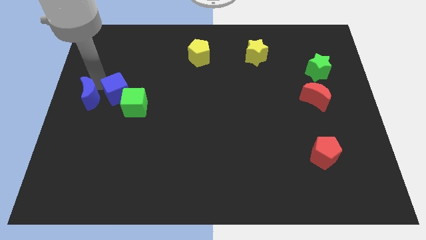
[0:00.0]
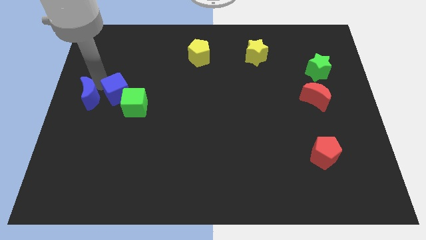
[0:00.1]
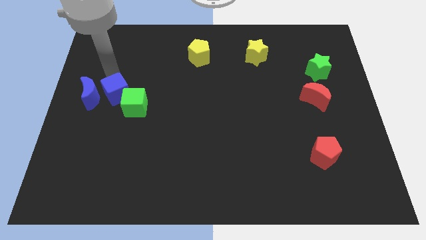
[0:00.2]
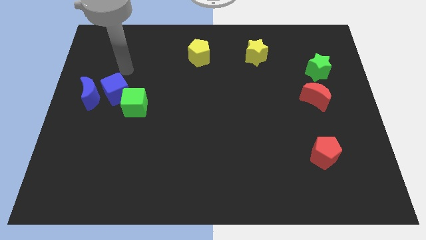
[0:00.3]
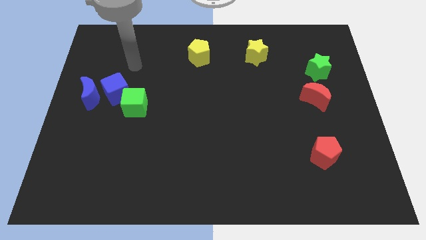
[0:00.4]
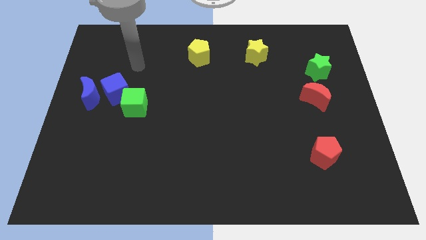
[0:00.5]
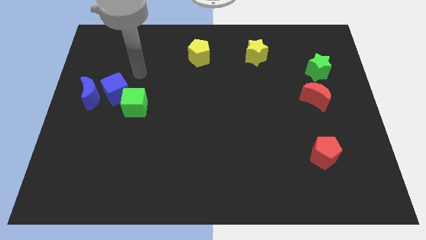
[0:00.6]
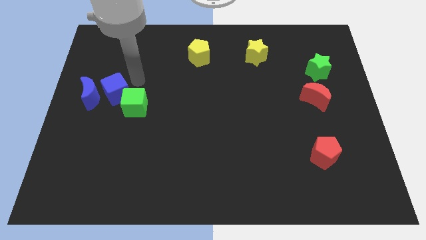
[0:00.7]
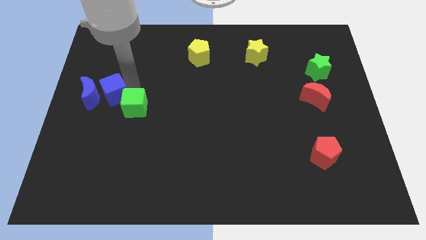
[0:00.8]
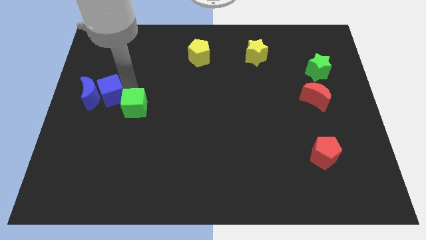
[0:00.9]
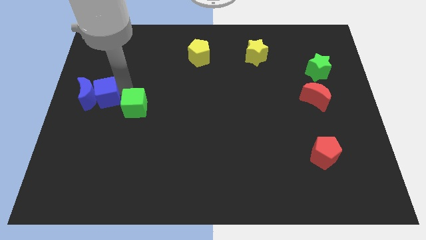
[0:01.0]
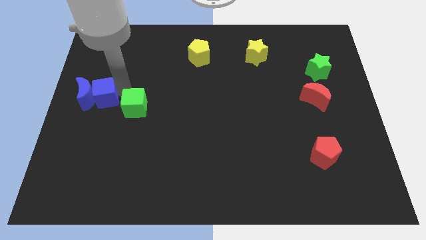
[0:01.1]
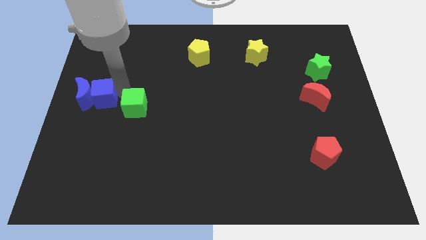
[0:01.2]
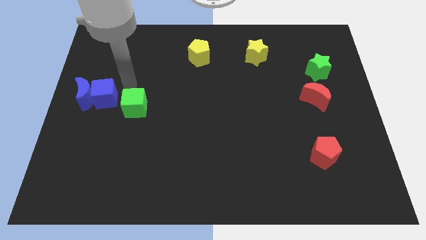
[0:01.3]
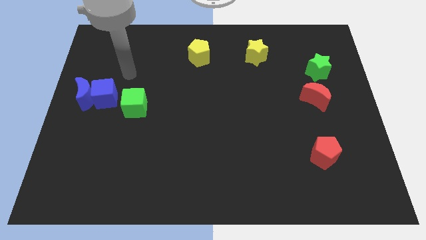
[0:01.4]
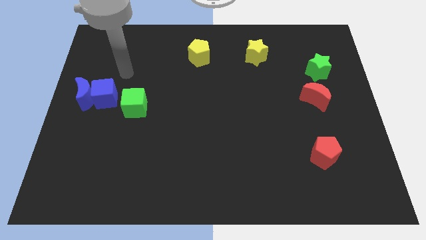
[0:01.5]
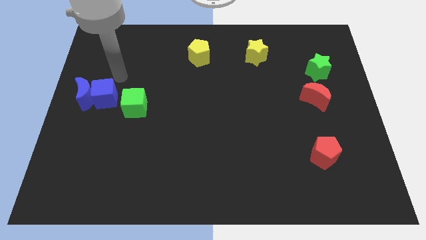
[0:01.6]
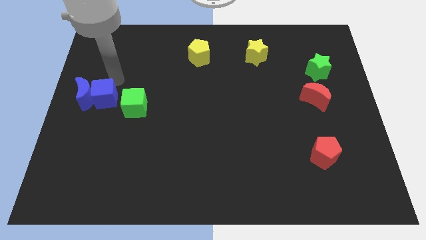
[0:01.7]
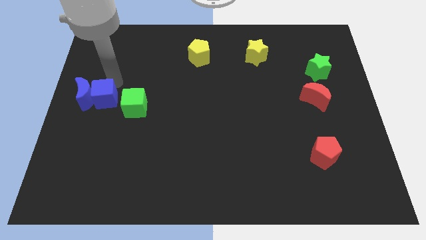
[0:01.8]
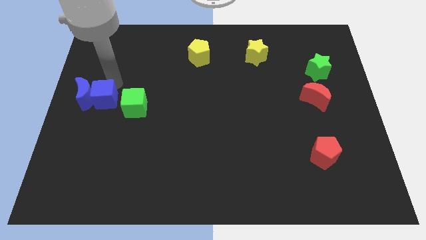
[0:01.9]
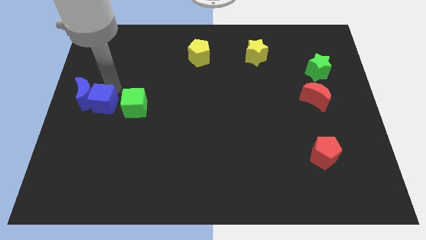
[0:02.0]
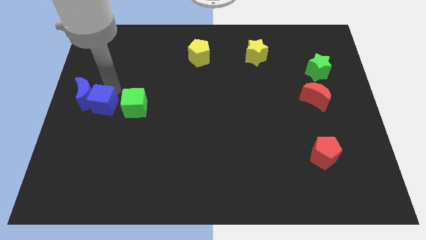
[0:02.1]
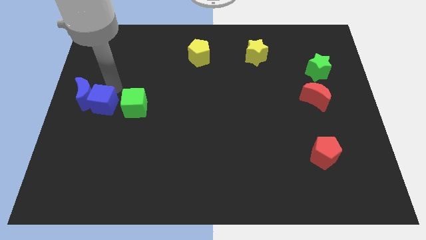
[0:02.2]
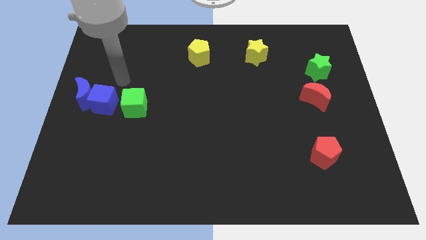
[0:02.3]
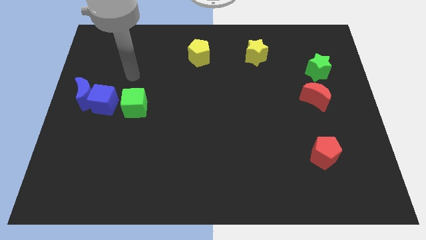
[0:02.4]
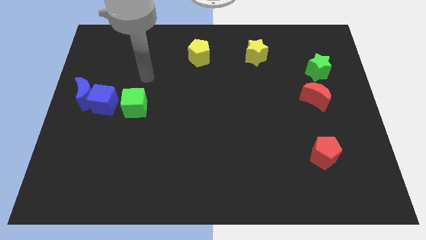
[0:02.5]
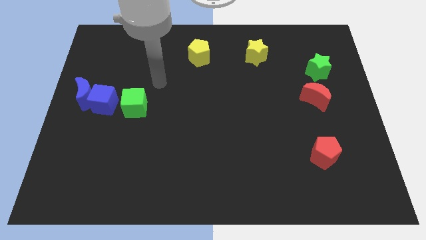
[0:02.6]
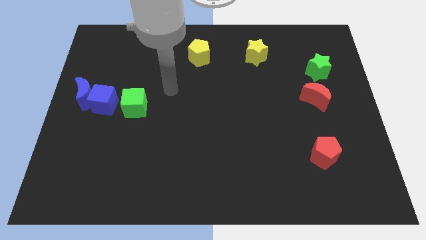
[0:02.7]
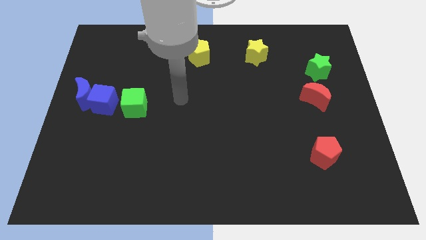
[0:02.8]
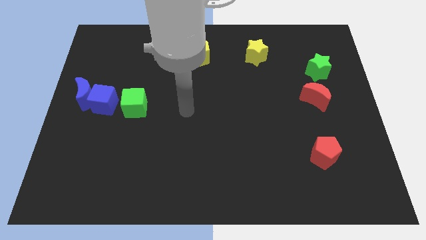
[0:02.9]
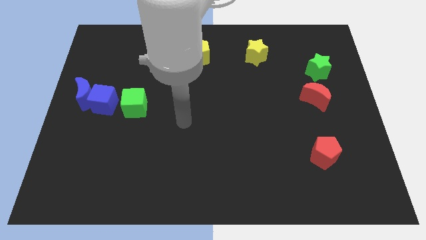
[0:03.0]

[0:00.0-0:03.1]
push blue cube into blue moon

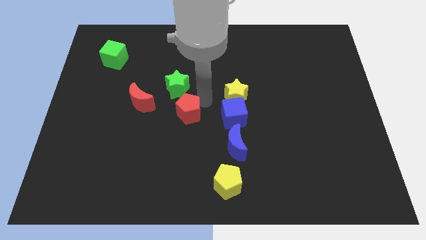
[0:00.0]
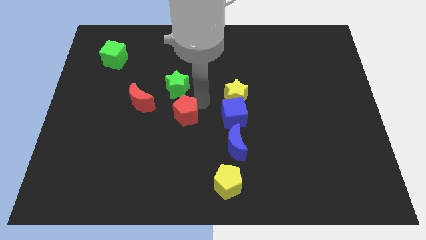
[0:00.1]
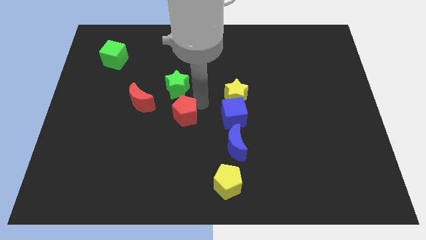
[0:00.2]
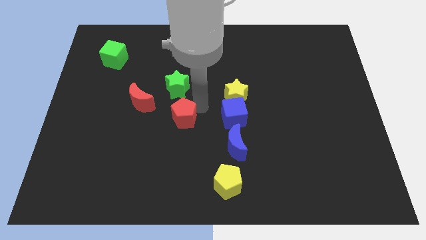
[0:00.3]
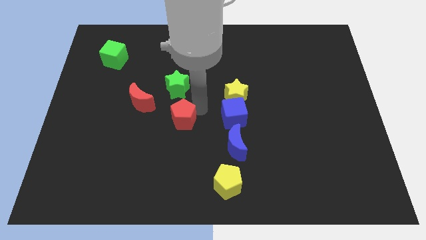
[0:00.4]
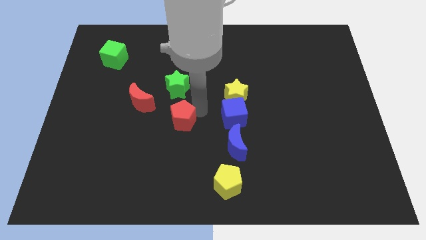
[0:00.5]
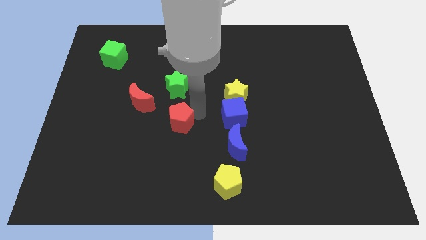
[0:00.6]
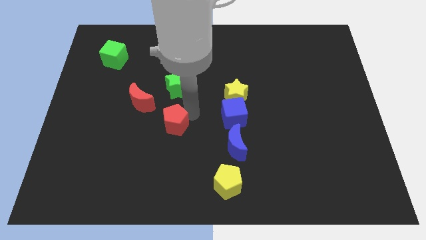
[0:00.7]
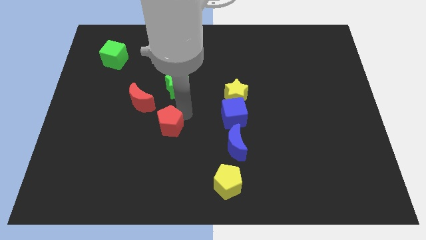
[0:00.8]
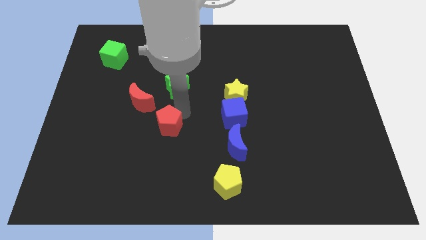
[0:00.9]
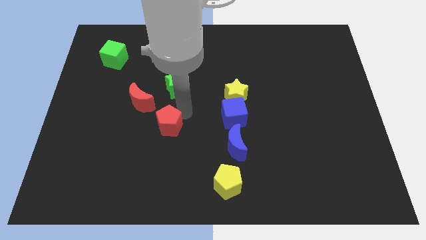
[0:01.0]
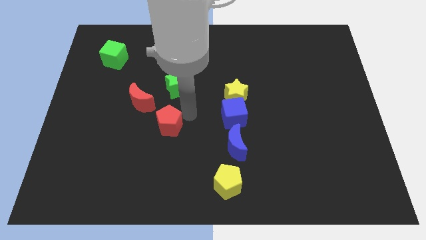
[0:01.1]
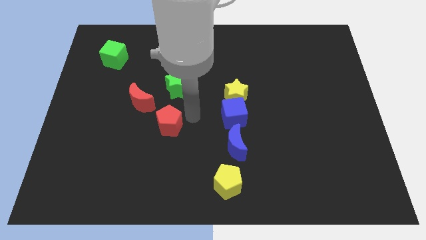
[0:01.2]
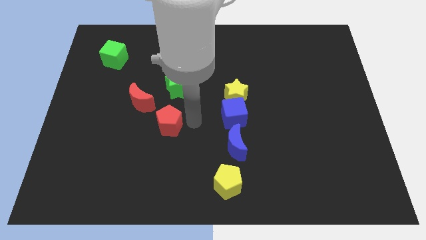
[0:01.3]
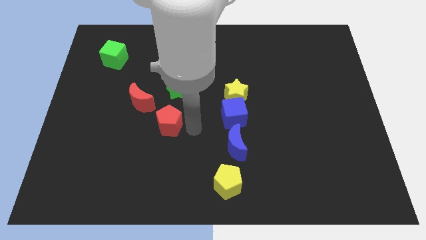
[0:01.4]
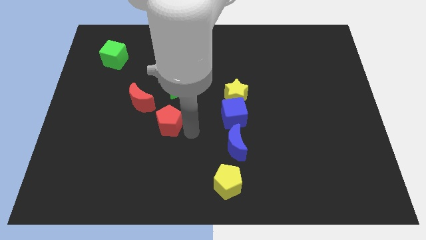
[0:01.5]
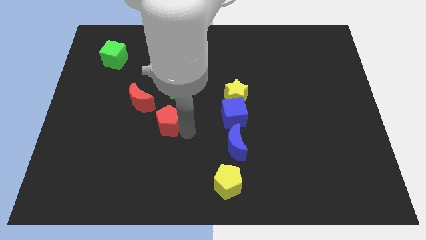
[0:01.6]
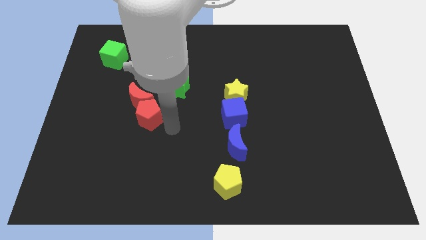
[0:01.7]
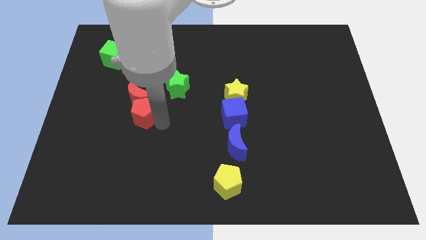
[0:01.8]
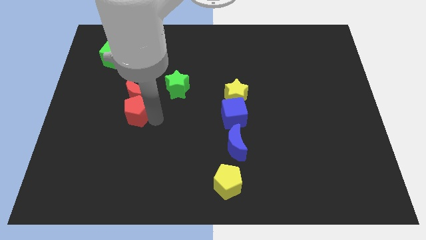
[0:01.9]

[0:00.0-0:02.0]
move the red pentagon into the red moon

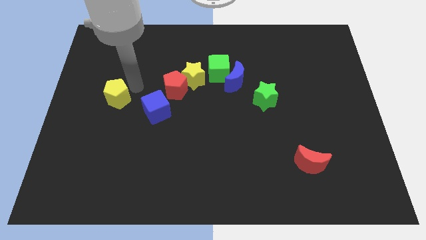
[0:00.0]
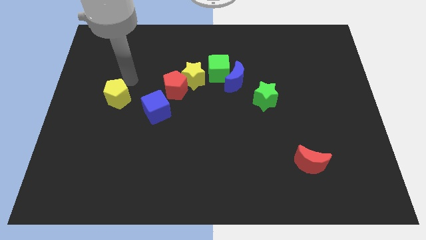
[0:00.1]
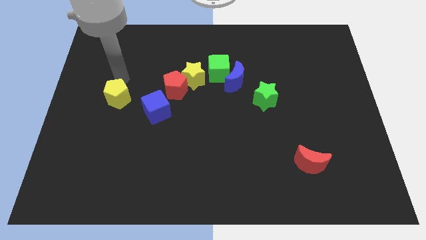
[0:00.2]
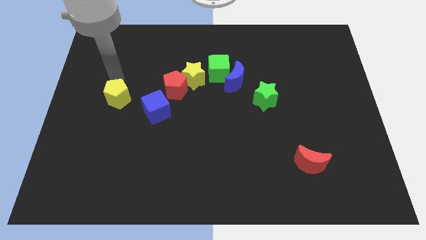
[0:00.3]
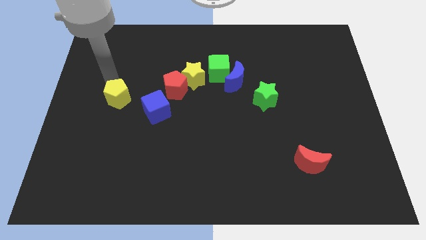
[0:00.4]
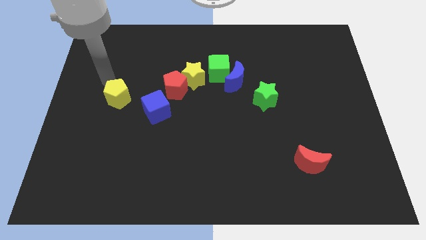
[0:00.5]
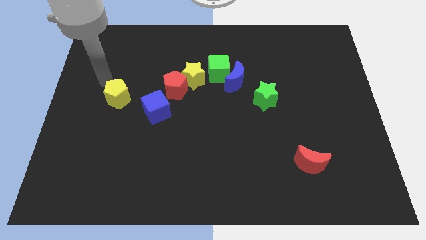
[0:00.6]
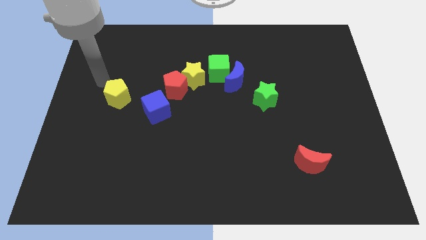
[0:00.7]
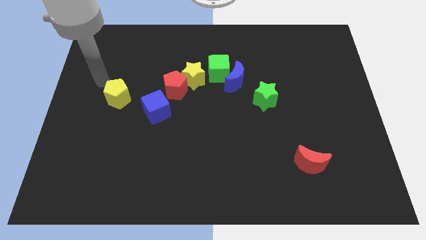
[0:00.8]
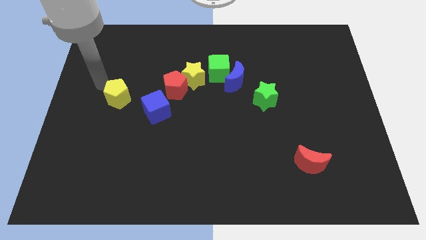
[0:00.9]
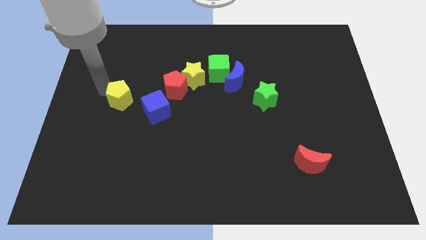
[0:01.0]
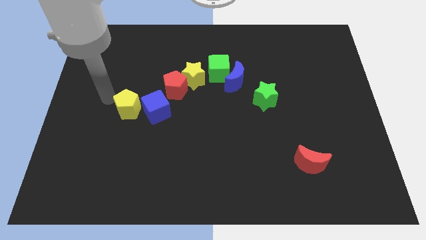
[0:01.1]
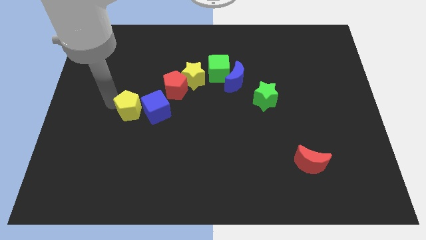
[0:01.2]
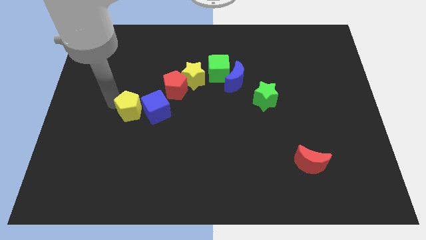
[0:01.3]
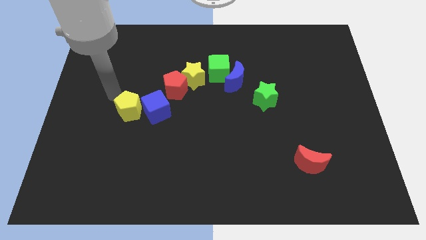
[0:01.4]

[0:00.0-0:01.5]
put the yellow pentagon top left to the blue cube

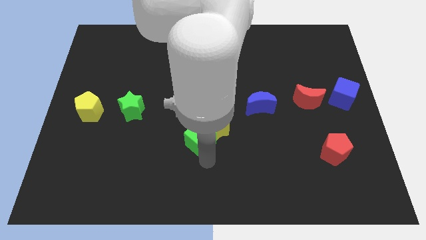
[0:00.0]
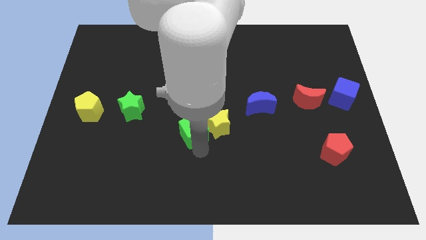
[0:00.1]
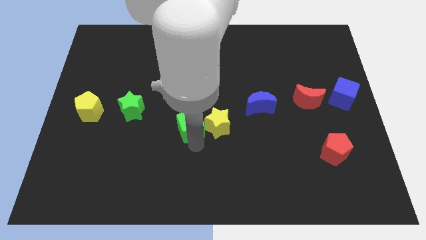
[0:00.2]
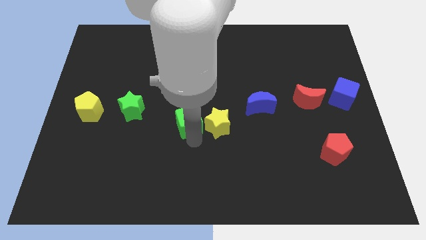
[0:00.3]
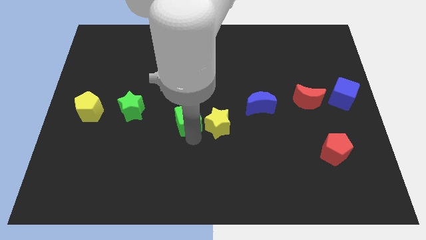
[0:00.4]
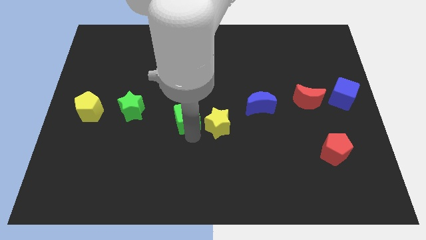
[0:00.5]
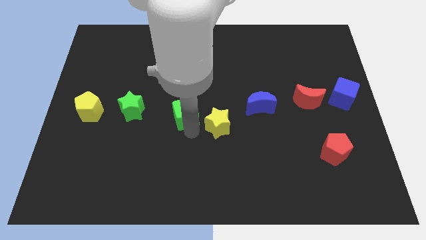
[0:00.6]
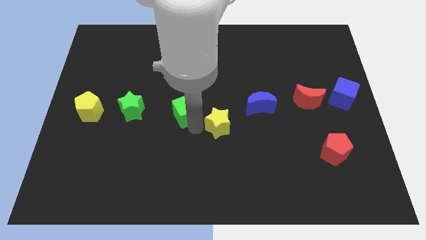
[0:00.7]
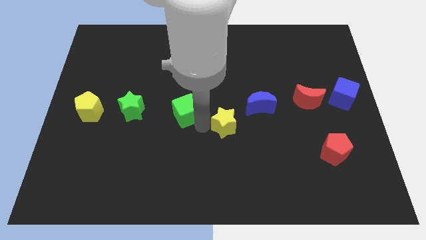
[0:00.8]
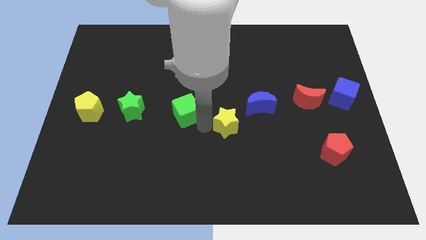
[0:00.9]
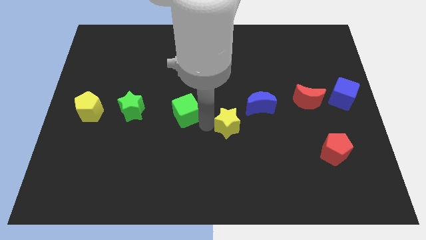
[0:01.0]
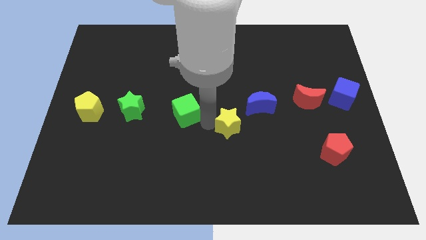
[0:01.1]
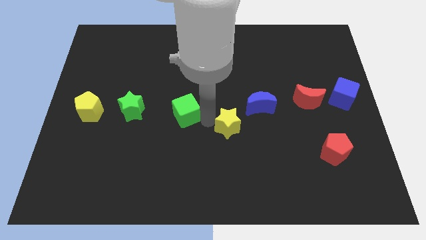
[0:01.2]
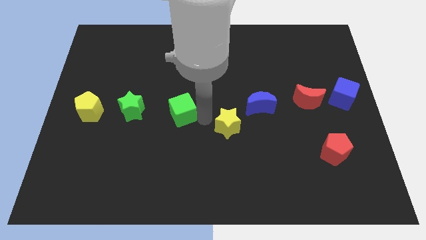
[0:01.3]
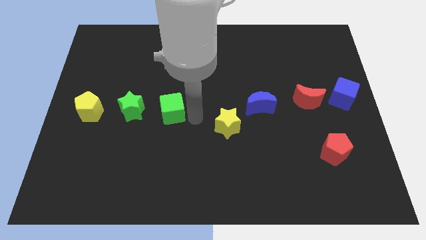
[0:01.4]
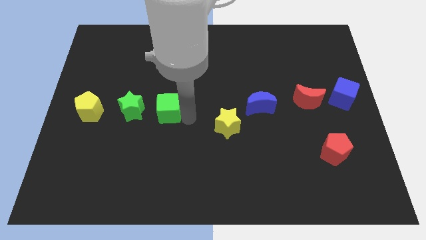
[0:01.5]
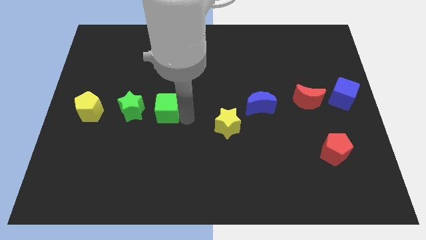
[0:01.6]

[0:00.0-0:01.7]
place the green cube beside the green star

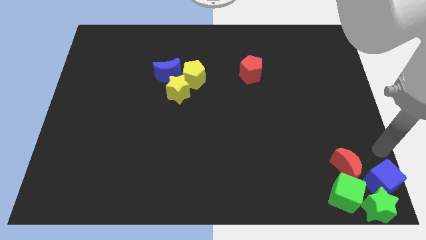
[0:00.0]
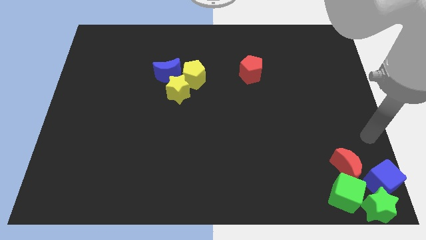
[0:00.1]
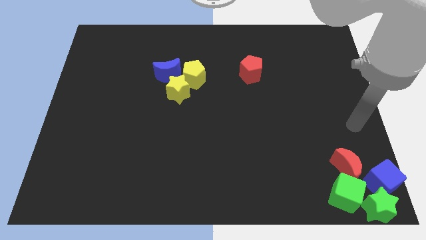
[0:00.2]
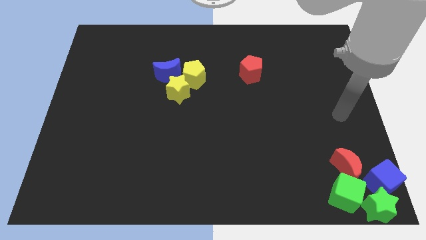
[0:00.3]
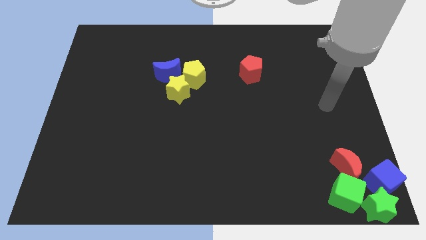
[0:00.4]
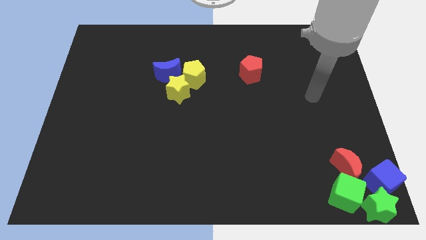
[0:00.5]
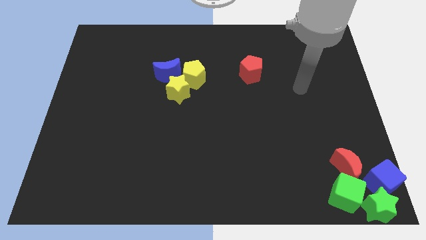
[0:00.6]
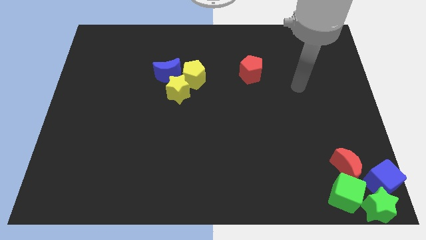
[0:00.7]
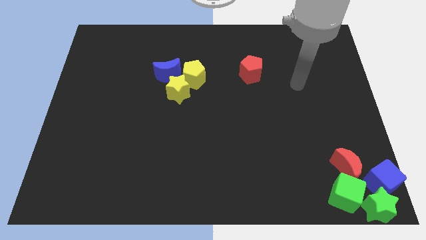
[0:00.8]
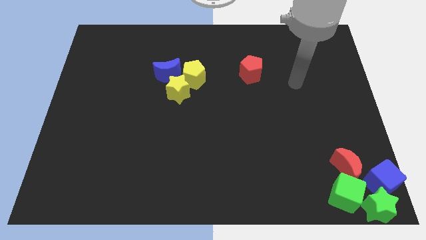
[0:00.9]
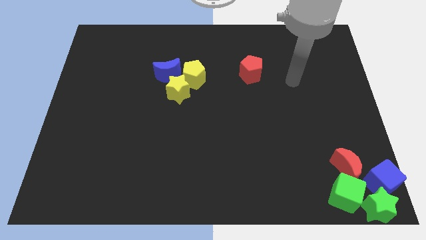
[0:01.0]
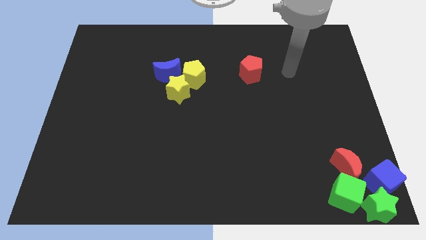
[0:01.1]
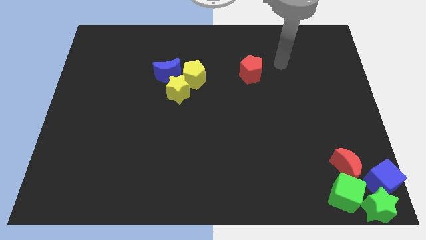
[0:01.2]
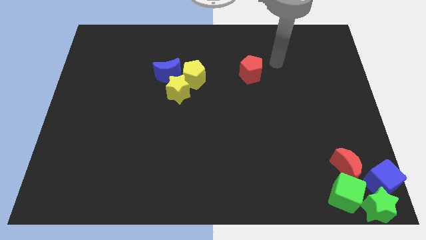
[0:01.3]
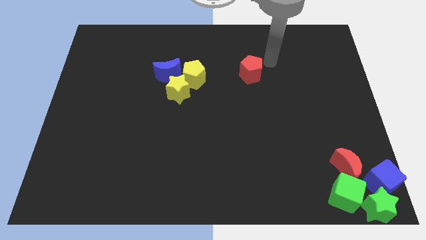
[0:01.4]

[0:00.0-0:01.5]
point your hand at the right side of the red pentagon
